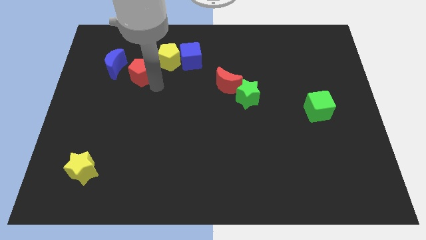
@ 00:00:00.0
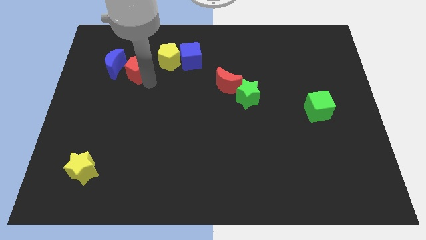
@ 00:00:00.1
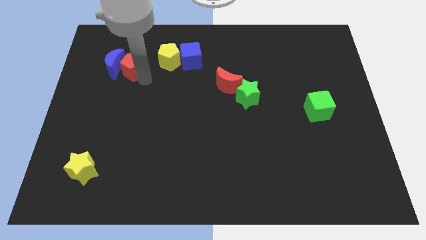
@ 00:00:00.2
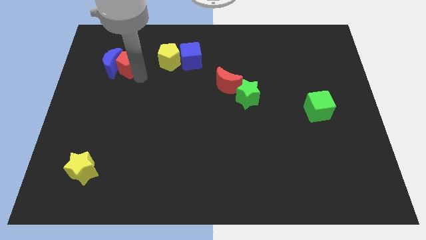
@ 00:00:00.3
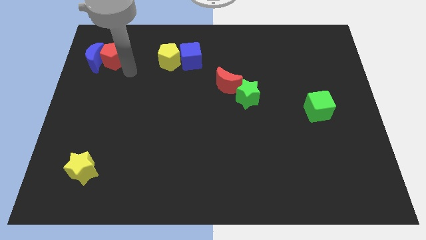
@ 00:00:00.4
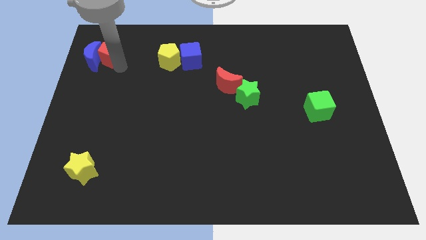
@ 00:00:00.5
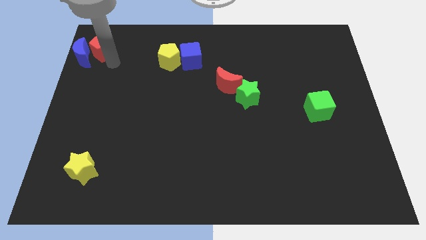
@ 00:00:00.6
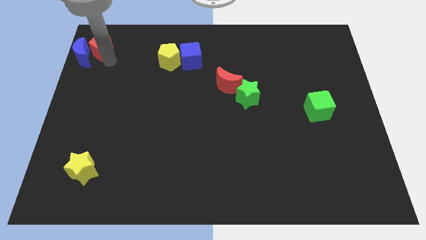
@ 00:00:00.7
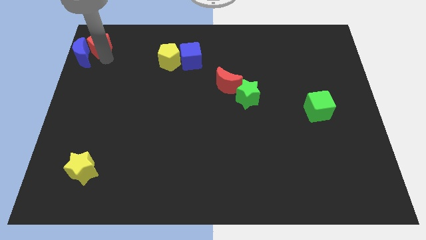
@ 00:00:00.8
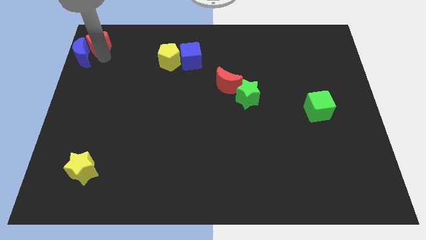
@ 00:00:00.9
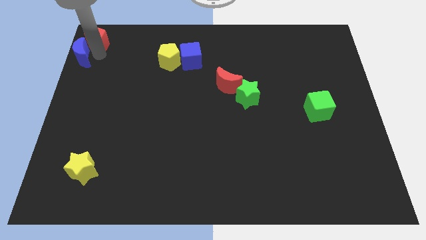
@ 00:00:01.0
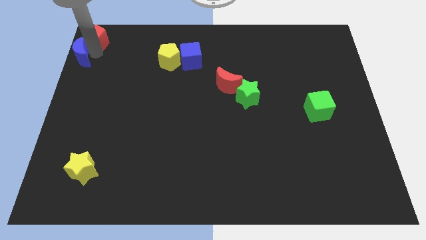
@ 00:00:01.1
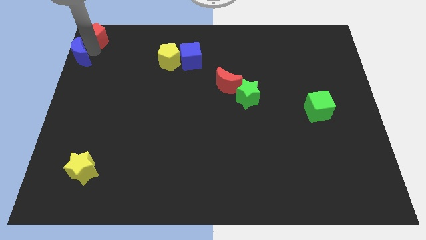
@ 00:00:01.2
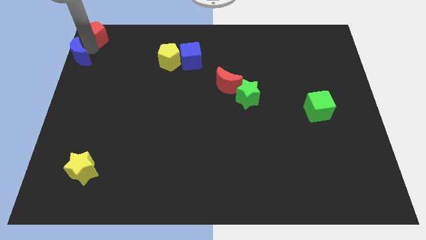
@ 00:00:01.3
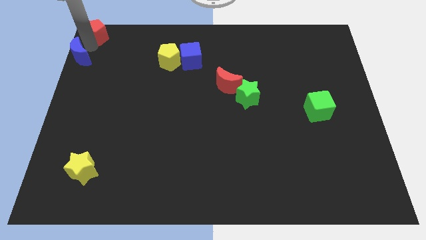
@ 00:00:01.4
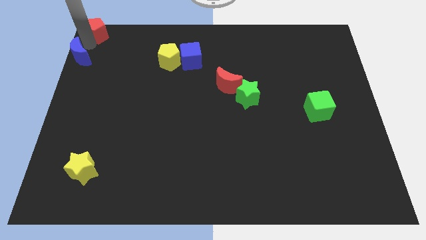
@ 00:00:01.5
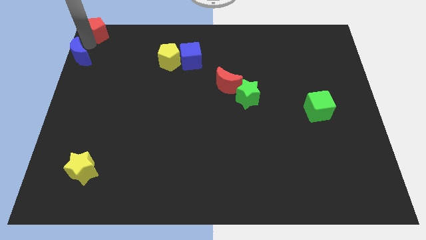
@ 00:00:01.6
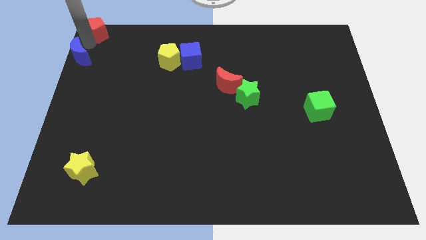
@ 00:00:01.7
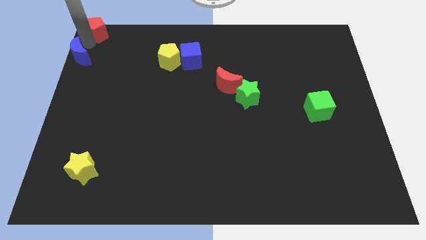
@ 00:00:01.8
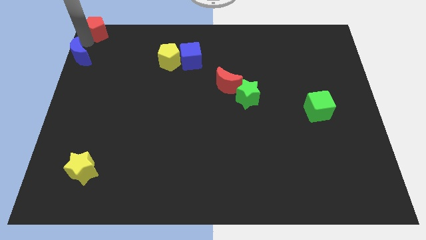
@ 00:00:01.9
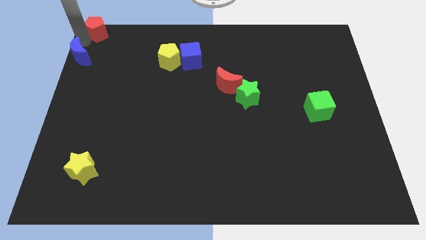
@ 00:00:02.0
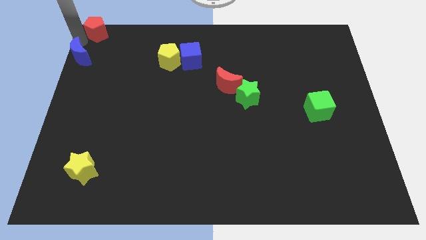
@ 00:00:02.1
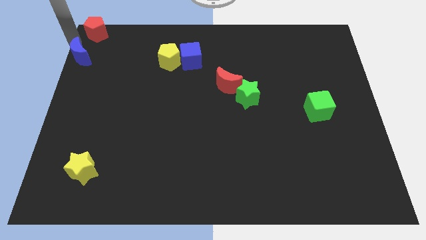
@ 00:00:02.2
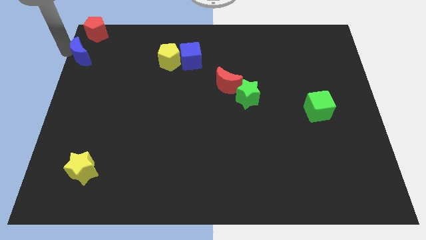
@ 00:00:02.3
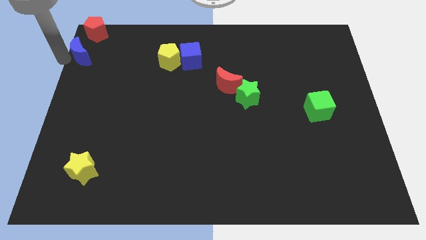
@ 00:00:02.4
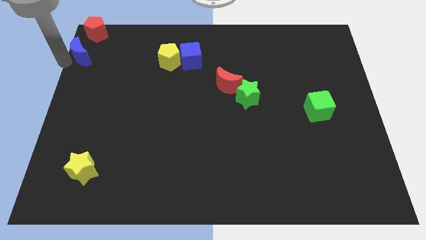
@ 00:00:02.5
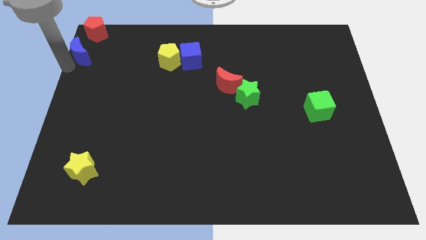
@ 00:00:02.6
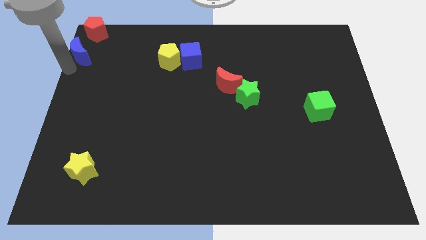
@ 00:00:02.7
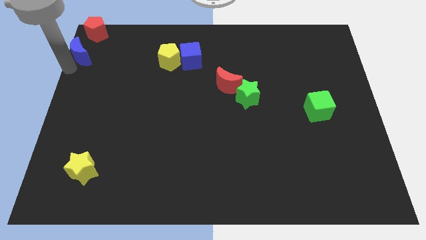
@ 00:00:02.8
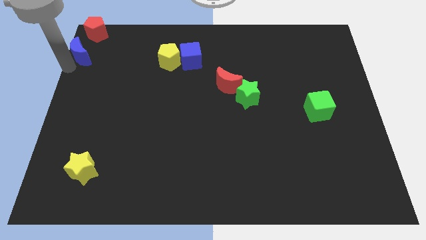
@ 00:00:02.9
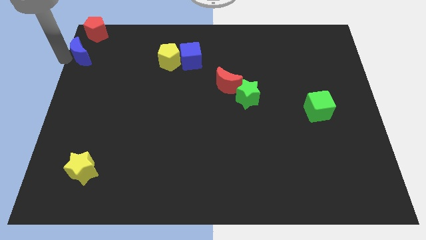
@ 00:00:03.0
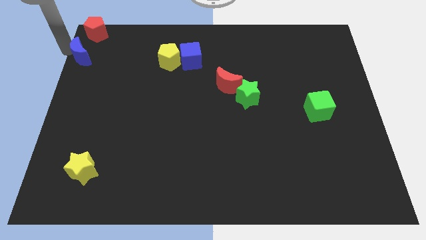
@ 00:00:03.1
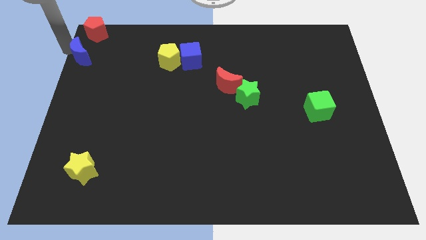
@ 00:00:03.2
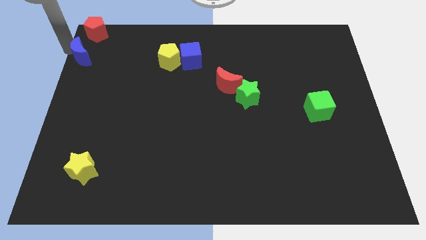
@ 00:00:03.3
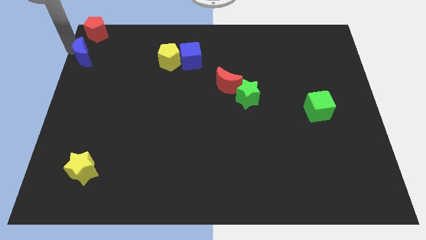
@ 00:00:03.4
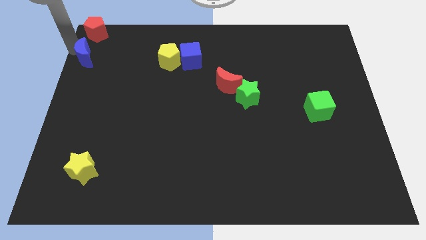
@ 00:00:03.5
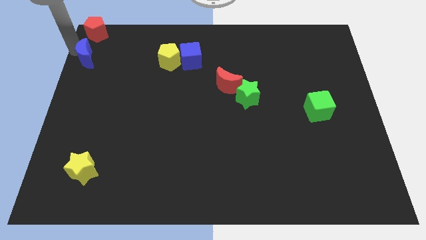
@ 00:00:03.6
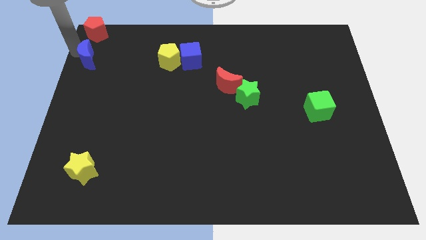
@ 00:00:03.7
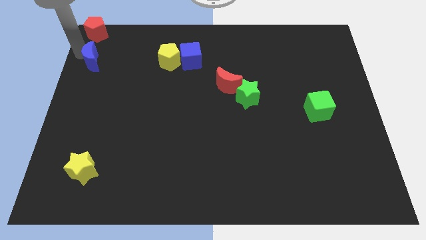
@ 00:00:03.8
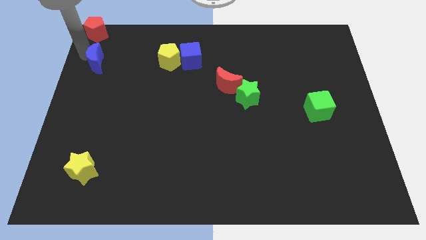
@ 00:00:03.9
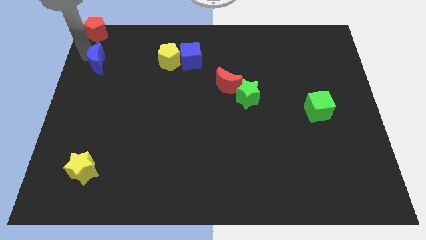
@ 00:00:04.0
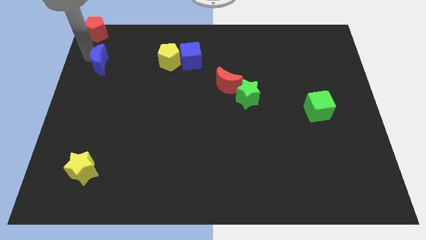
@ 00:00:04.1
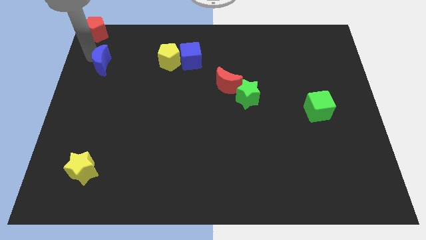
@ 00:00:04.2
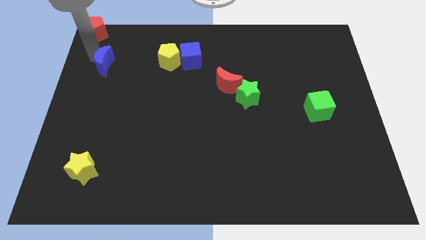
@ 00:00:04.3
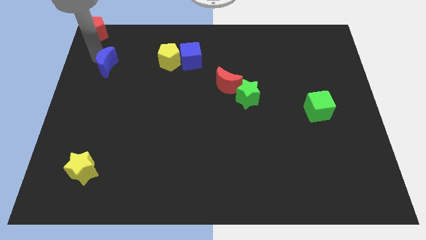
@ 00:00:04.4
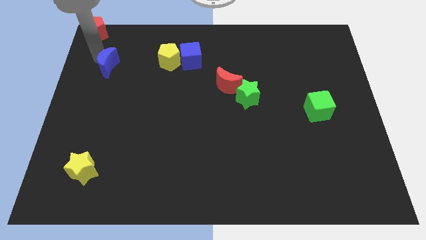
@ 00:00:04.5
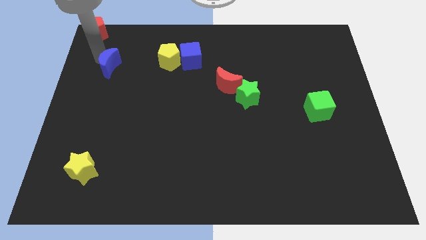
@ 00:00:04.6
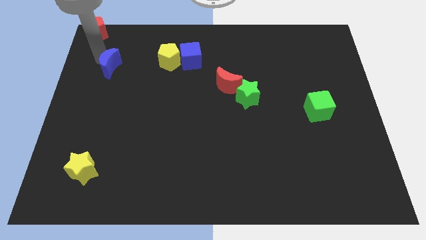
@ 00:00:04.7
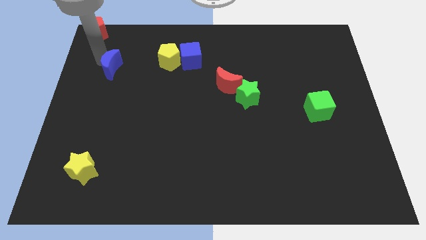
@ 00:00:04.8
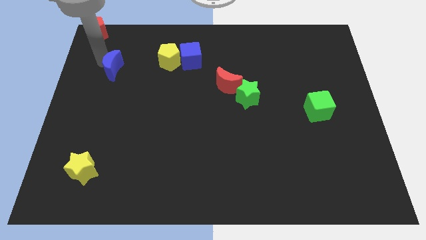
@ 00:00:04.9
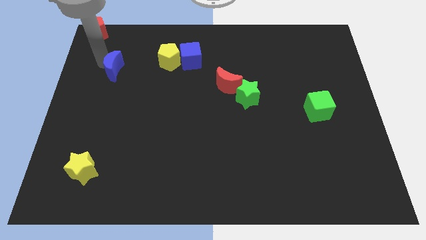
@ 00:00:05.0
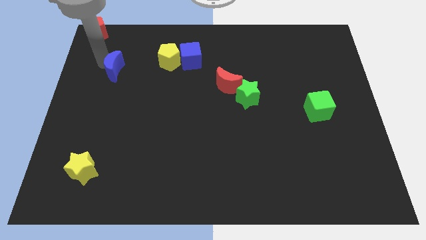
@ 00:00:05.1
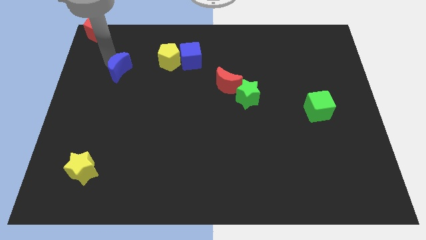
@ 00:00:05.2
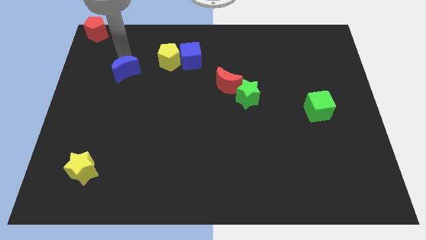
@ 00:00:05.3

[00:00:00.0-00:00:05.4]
push the red pentagon to the top left

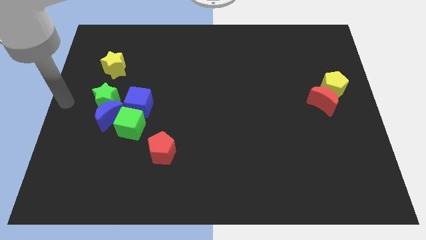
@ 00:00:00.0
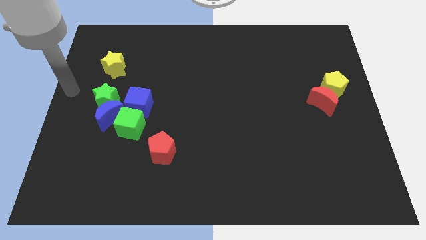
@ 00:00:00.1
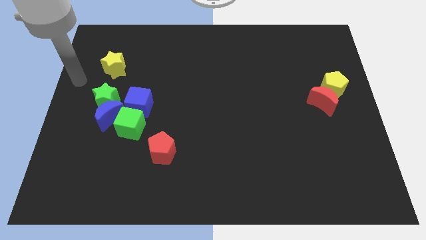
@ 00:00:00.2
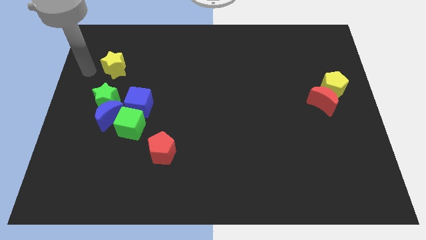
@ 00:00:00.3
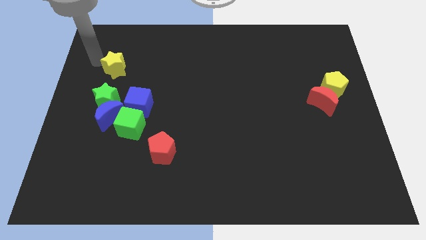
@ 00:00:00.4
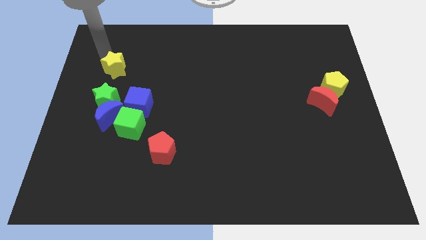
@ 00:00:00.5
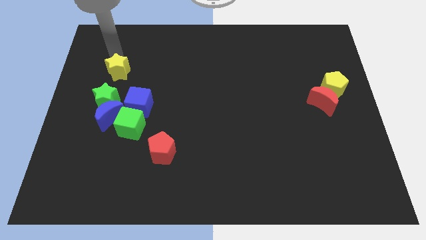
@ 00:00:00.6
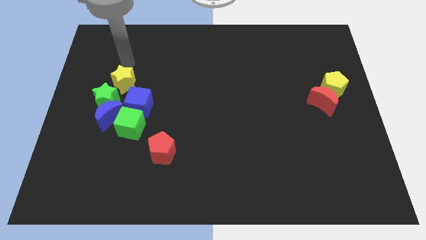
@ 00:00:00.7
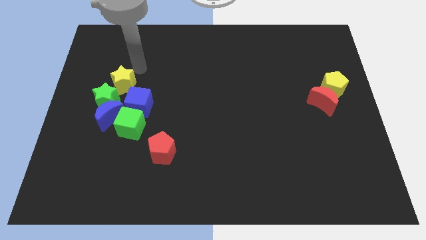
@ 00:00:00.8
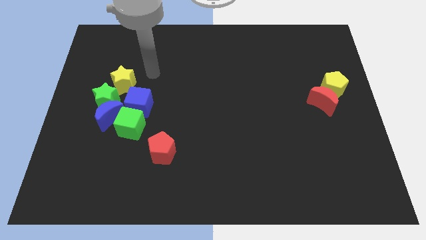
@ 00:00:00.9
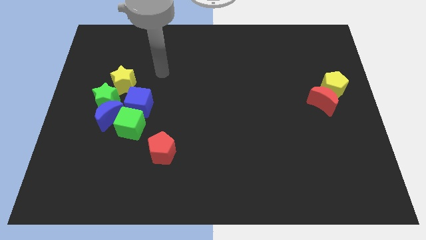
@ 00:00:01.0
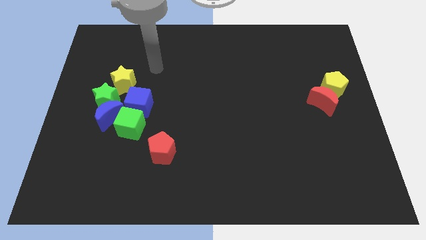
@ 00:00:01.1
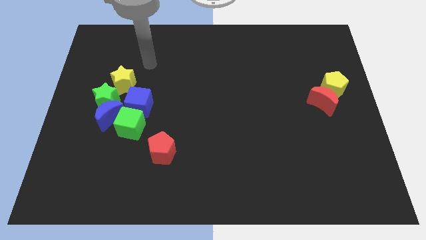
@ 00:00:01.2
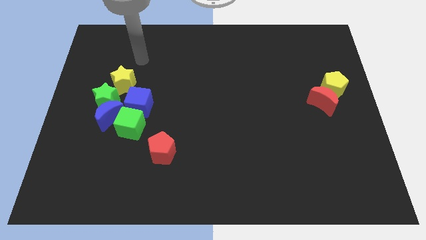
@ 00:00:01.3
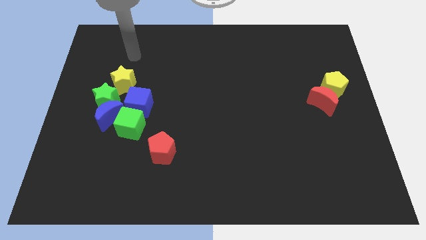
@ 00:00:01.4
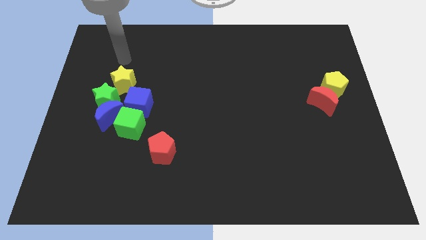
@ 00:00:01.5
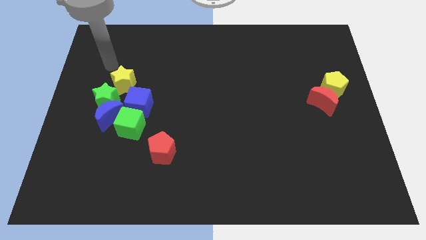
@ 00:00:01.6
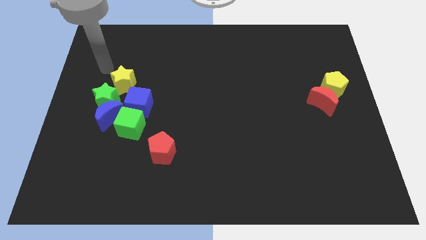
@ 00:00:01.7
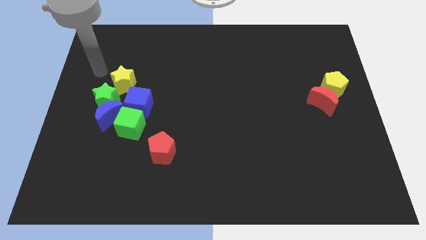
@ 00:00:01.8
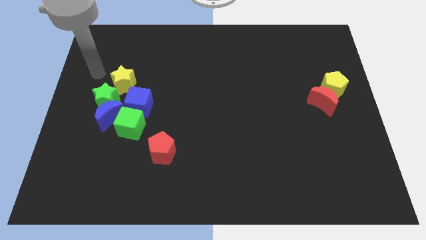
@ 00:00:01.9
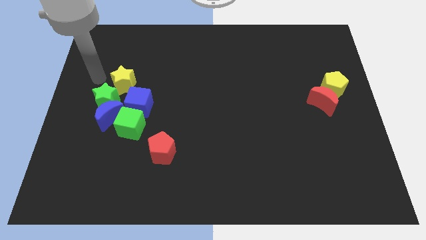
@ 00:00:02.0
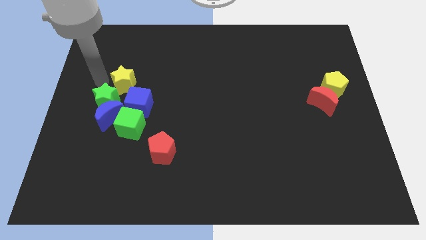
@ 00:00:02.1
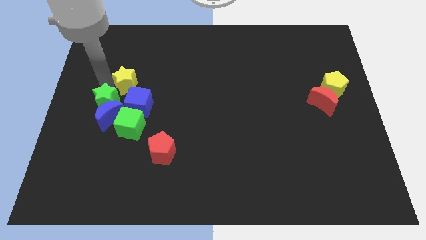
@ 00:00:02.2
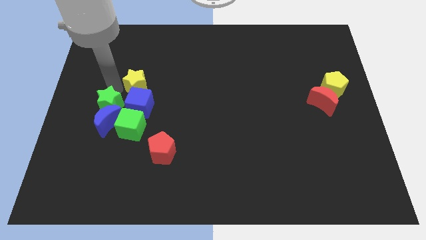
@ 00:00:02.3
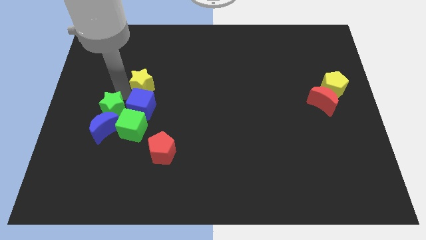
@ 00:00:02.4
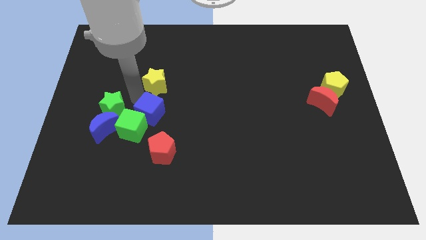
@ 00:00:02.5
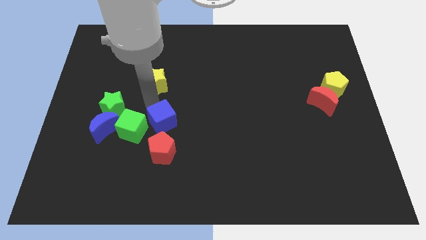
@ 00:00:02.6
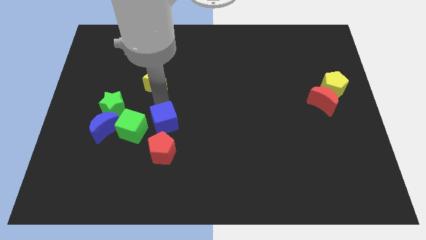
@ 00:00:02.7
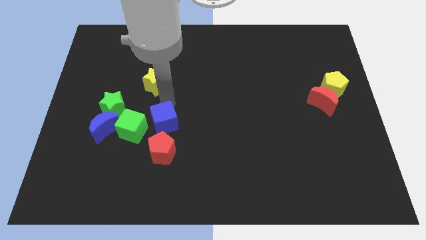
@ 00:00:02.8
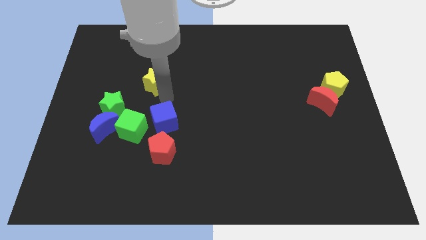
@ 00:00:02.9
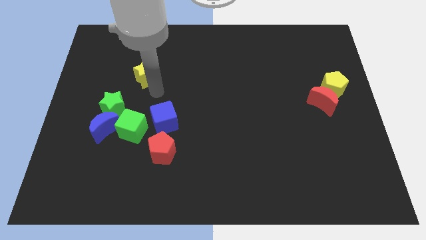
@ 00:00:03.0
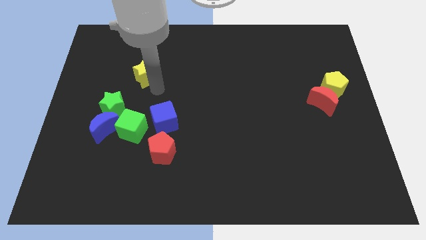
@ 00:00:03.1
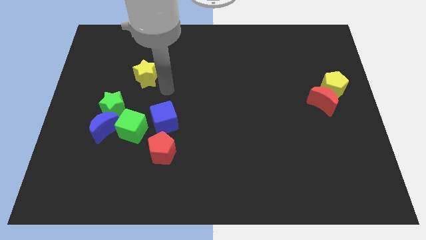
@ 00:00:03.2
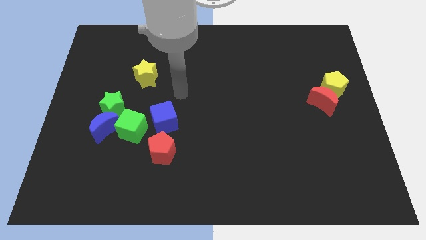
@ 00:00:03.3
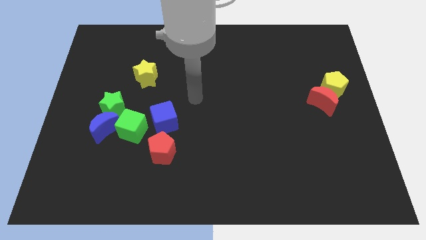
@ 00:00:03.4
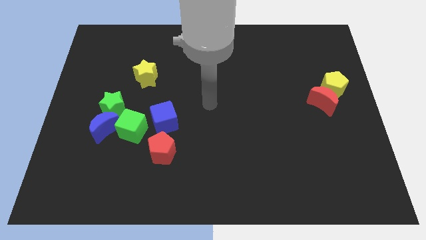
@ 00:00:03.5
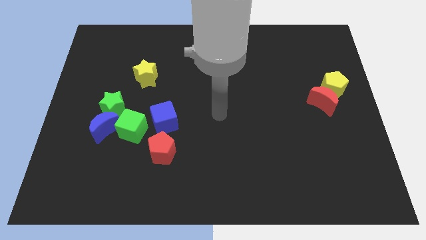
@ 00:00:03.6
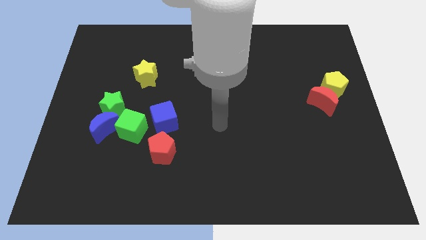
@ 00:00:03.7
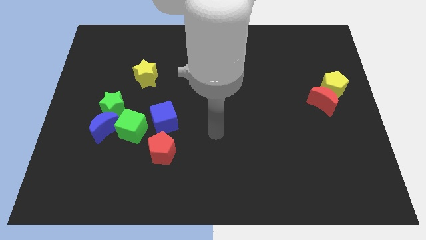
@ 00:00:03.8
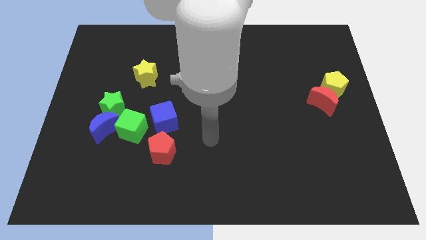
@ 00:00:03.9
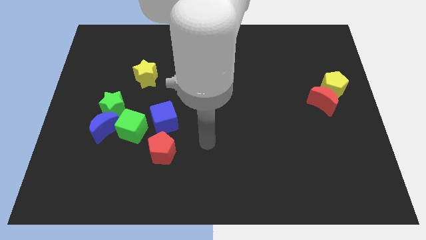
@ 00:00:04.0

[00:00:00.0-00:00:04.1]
separate all the cubes from yellow star
